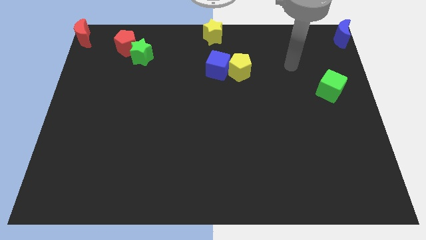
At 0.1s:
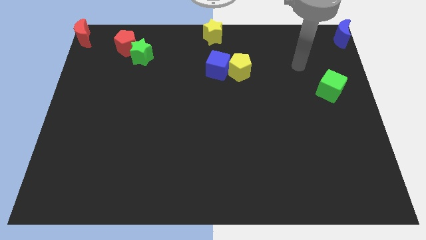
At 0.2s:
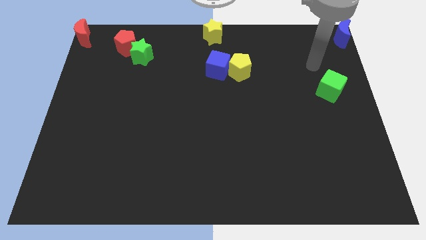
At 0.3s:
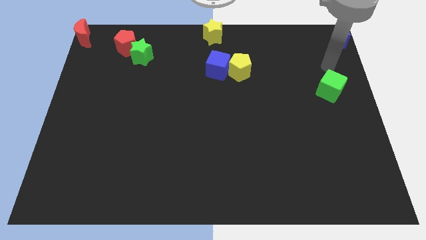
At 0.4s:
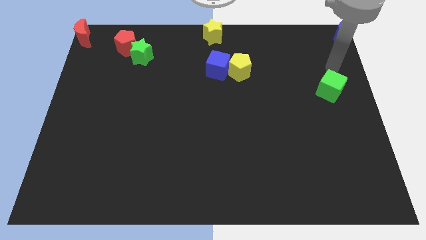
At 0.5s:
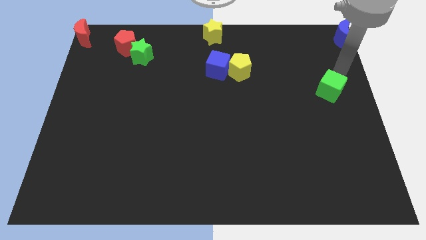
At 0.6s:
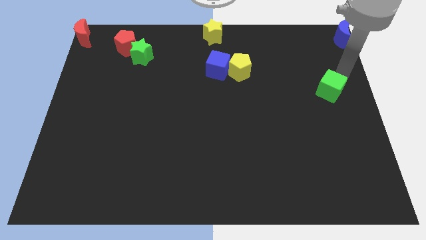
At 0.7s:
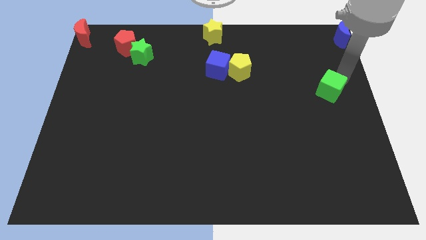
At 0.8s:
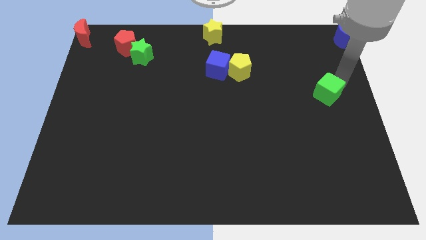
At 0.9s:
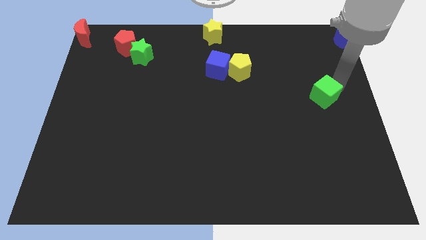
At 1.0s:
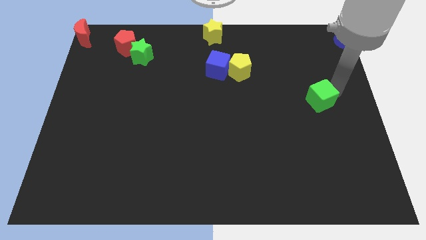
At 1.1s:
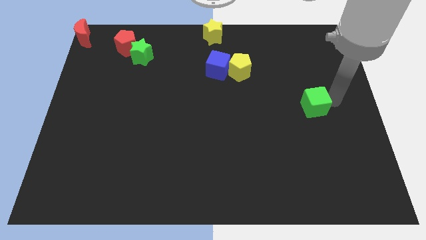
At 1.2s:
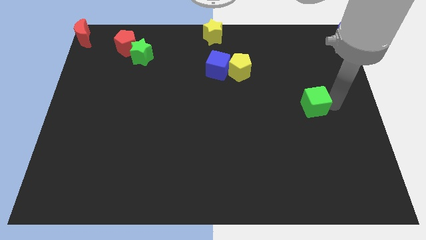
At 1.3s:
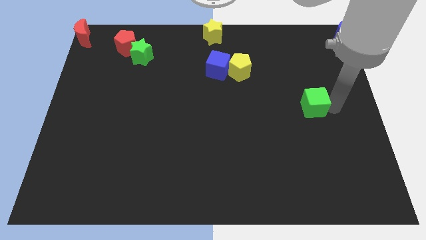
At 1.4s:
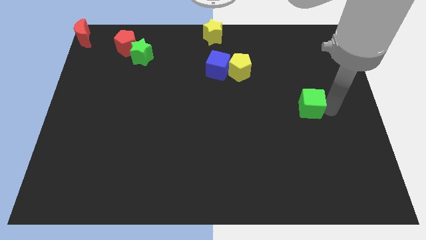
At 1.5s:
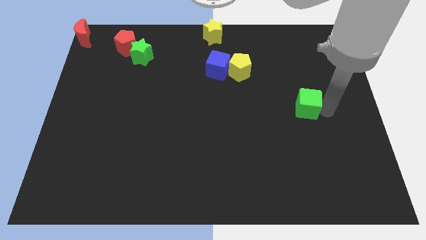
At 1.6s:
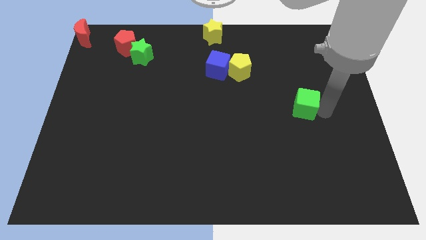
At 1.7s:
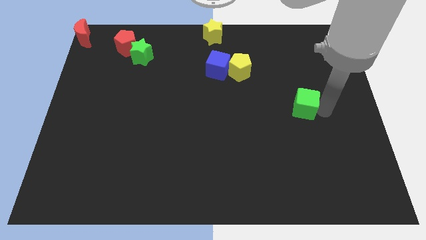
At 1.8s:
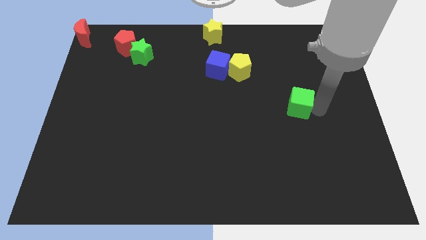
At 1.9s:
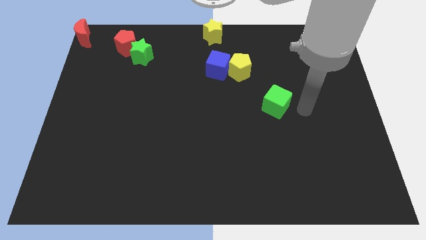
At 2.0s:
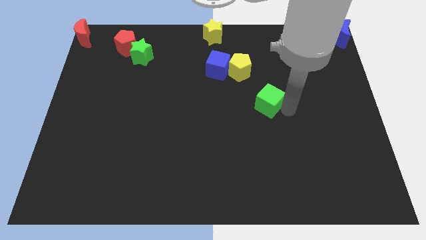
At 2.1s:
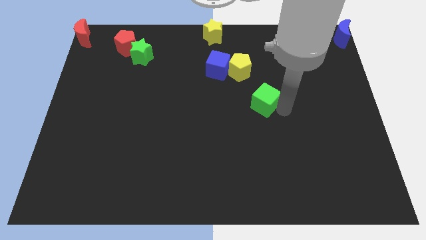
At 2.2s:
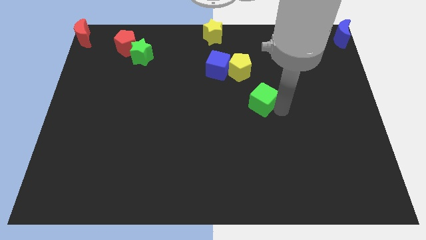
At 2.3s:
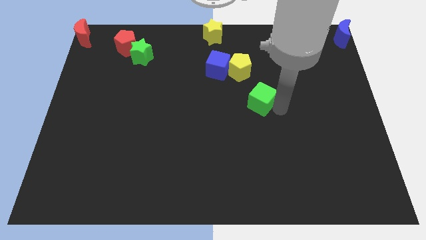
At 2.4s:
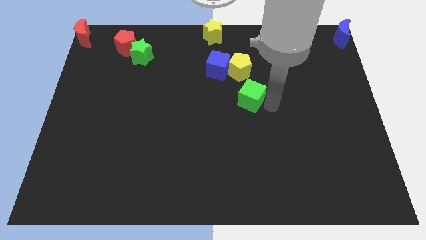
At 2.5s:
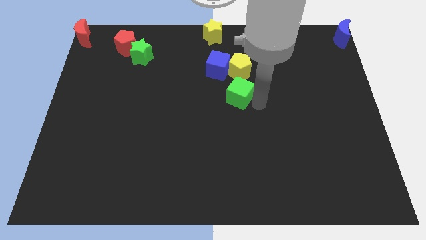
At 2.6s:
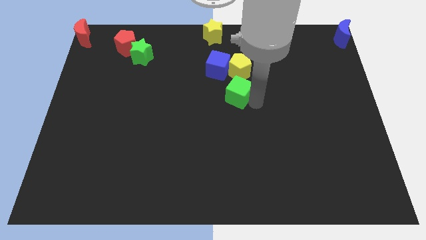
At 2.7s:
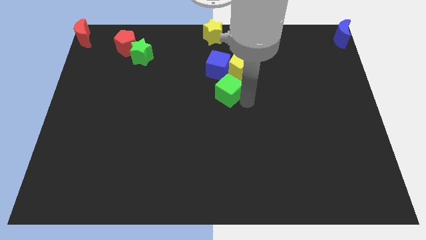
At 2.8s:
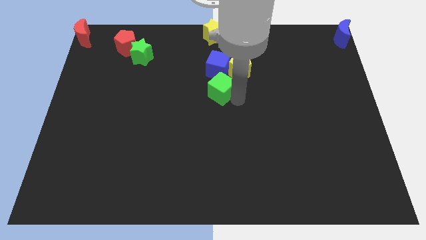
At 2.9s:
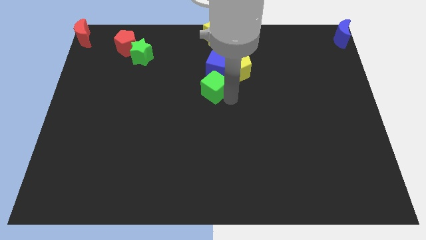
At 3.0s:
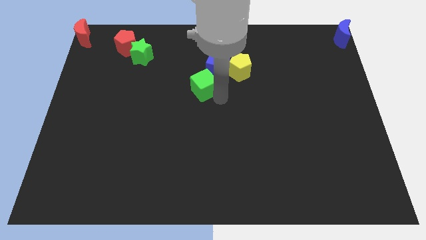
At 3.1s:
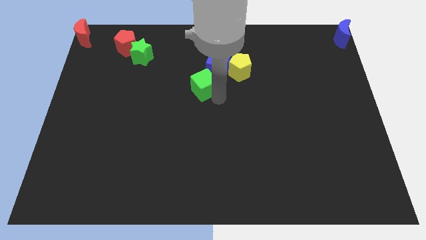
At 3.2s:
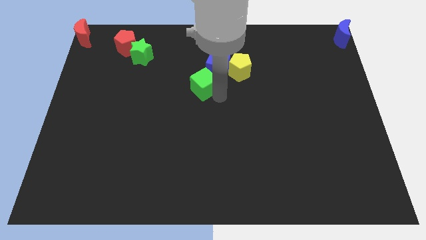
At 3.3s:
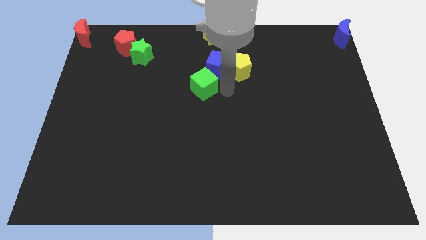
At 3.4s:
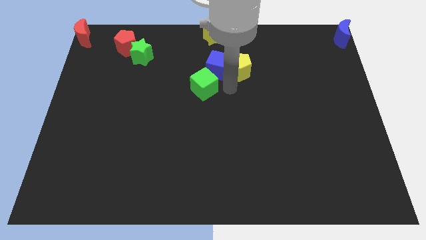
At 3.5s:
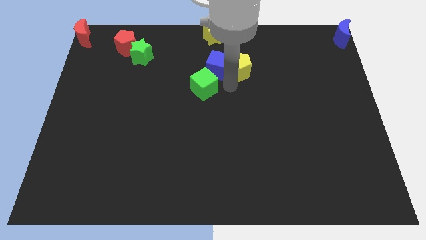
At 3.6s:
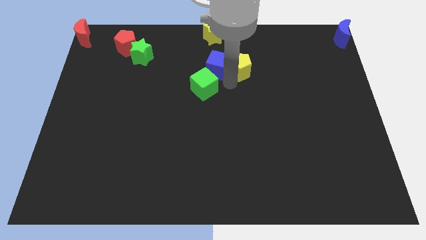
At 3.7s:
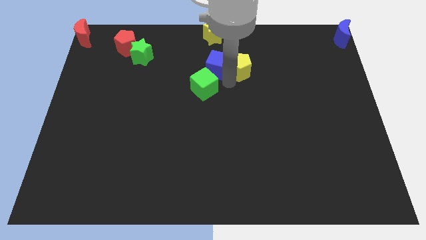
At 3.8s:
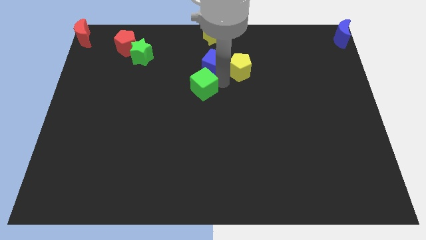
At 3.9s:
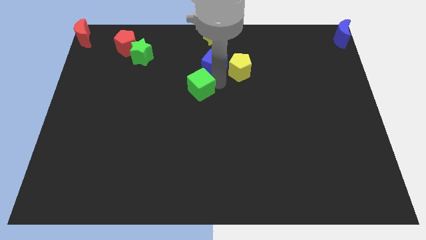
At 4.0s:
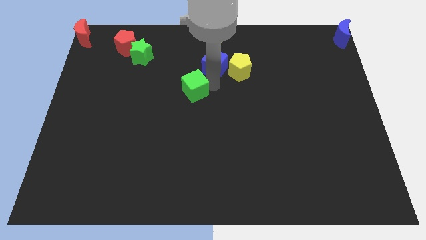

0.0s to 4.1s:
move green cube to the bottom left of blue cube

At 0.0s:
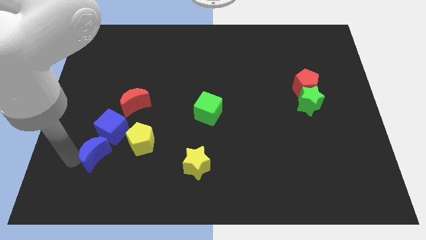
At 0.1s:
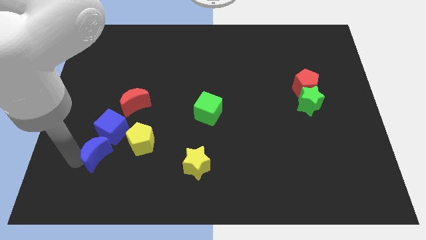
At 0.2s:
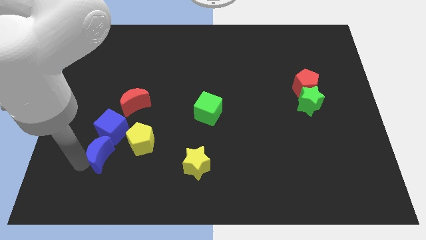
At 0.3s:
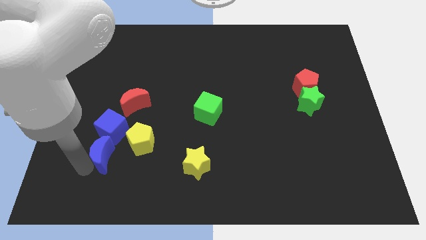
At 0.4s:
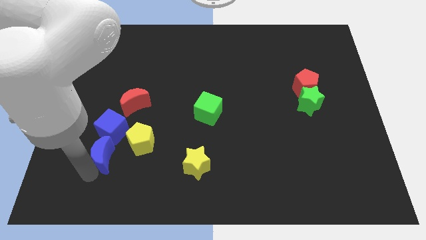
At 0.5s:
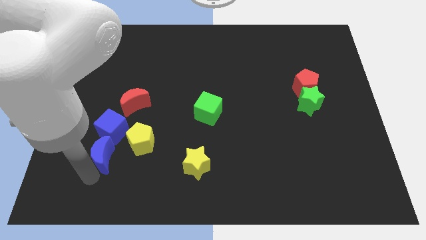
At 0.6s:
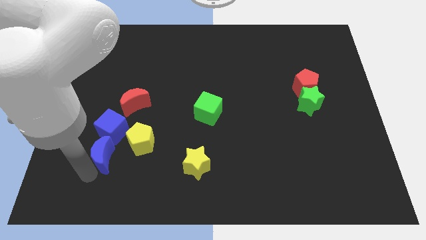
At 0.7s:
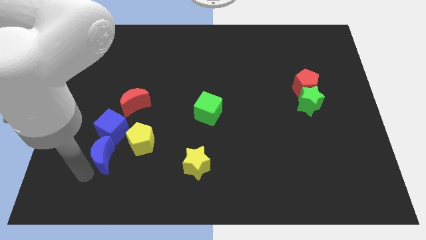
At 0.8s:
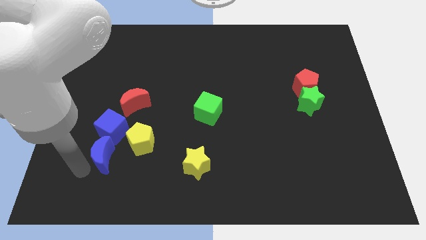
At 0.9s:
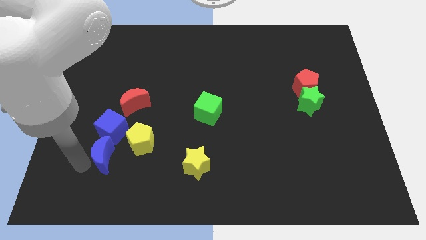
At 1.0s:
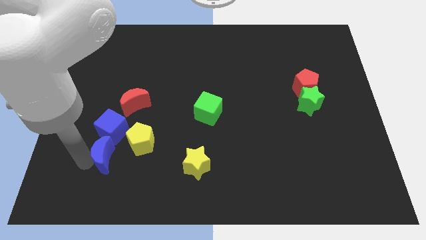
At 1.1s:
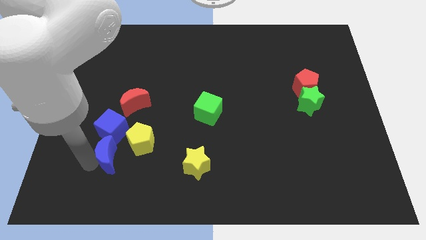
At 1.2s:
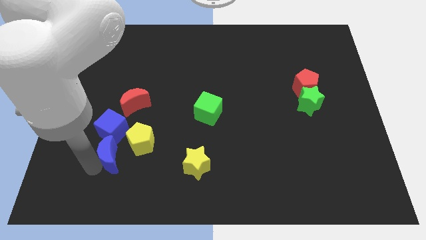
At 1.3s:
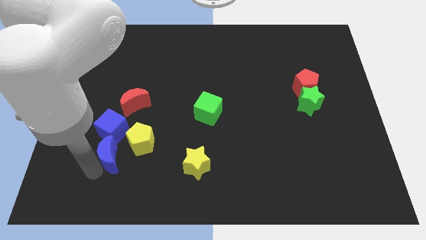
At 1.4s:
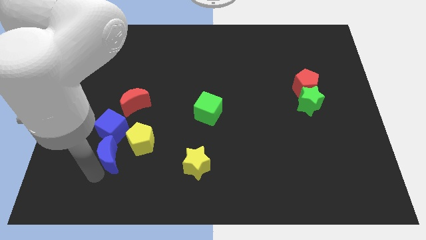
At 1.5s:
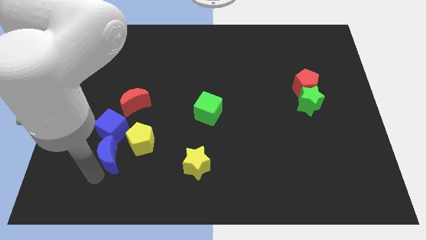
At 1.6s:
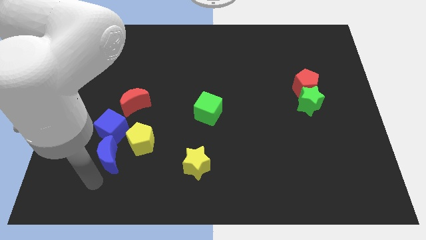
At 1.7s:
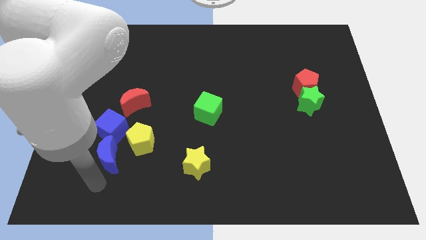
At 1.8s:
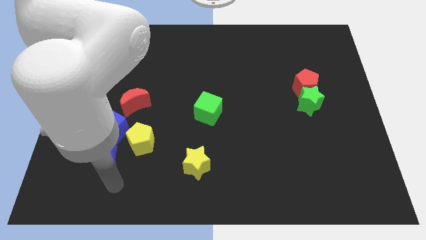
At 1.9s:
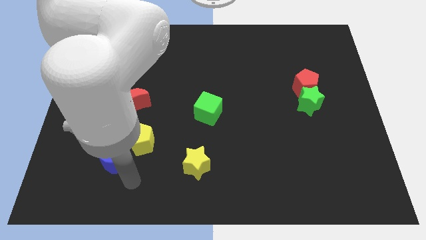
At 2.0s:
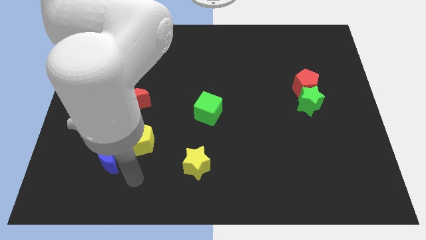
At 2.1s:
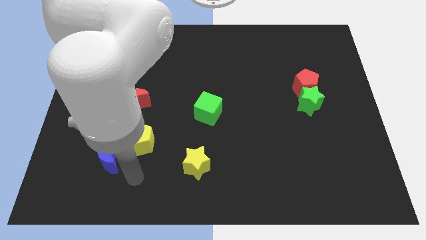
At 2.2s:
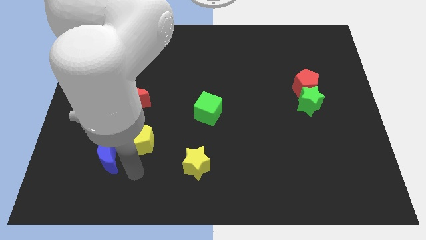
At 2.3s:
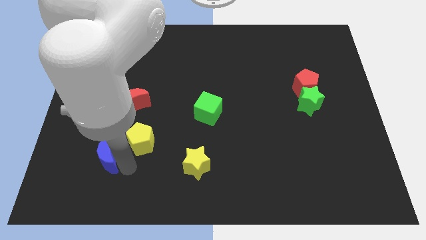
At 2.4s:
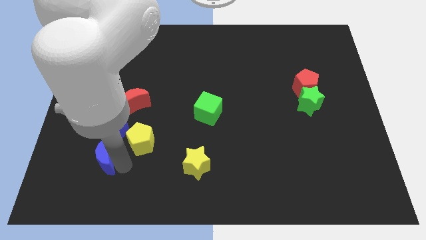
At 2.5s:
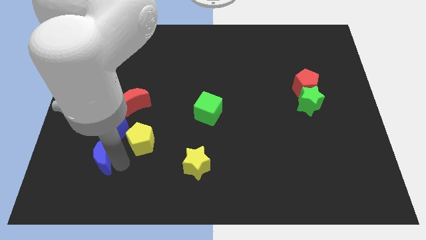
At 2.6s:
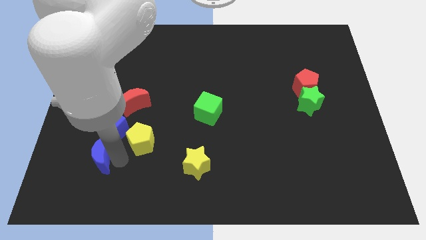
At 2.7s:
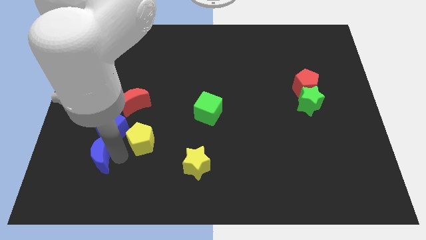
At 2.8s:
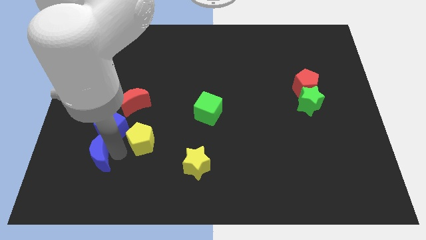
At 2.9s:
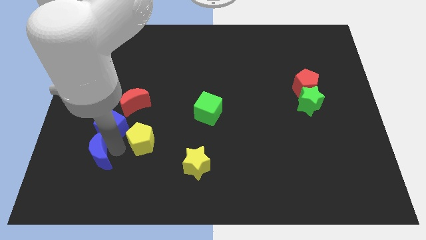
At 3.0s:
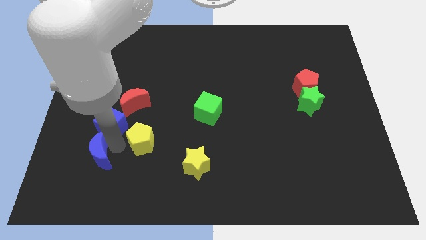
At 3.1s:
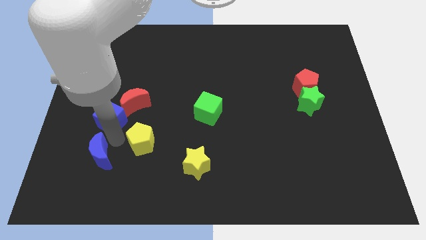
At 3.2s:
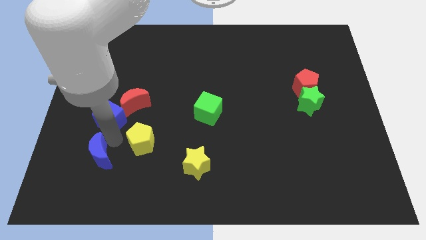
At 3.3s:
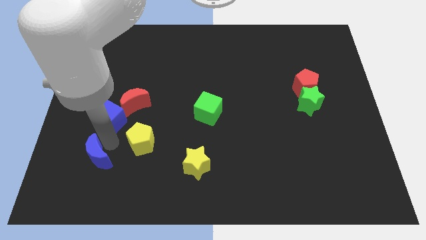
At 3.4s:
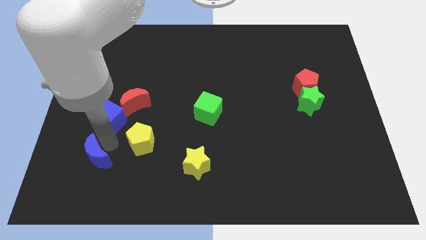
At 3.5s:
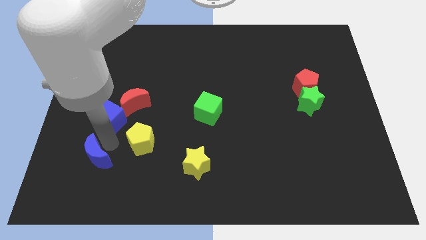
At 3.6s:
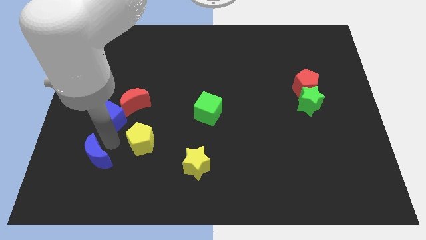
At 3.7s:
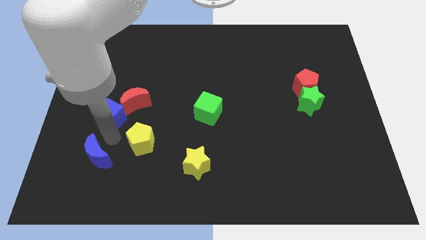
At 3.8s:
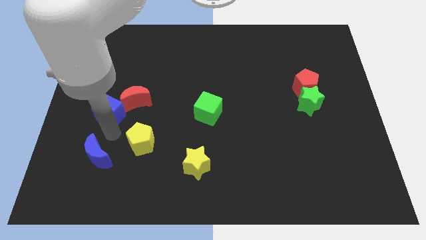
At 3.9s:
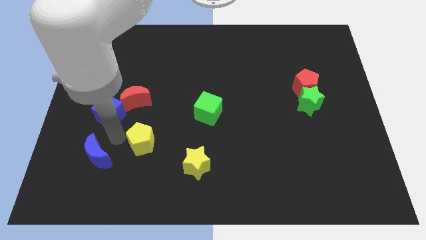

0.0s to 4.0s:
separate the blue cube and blue crescent

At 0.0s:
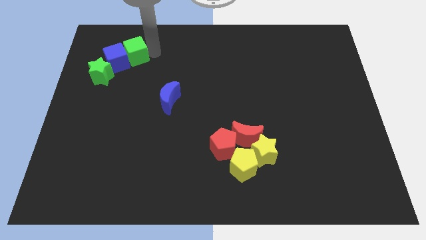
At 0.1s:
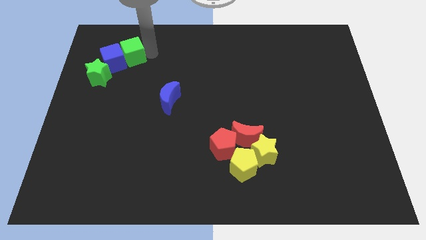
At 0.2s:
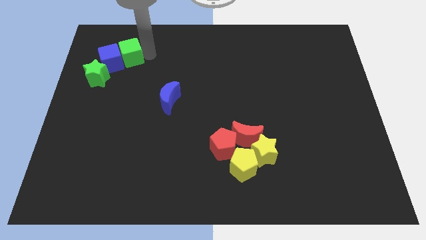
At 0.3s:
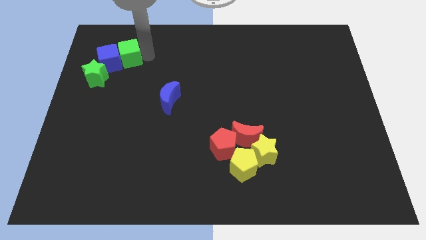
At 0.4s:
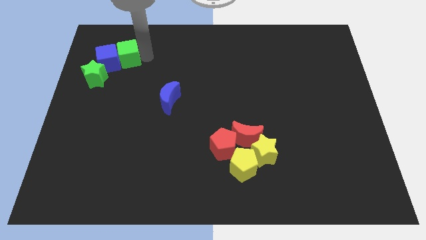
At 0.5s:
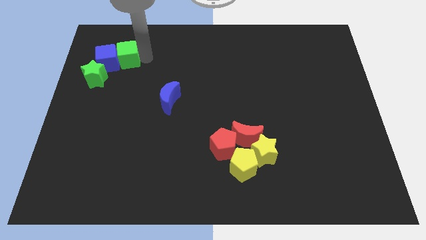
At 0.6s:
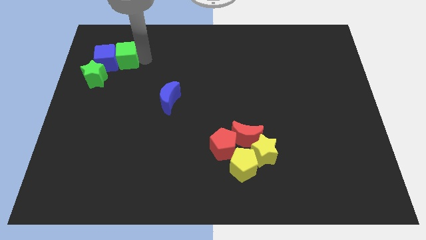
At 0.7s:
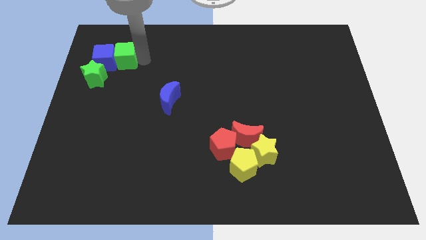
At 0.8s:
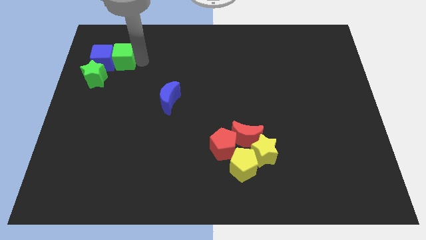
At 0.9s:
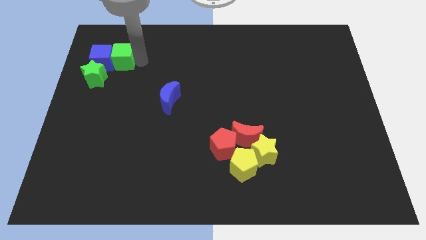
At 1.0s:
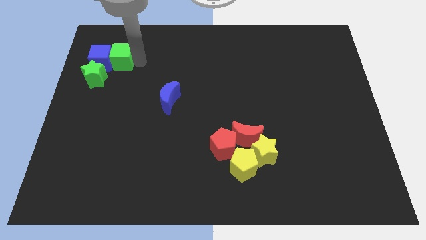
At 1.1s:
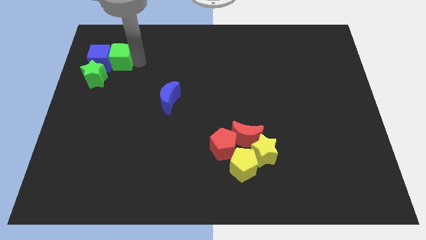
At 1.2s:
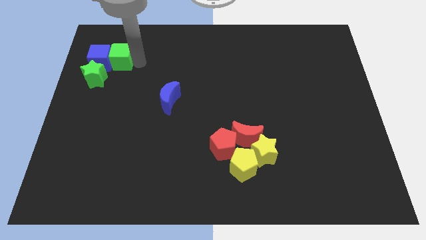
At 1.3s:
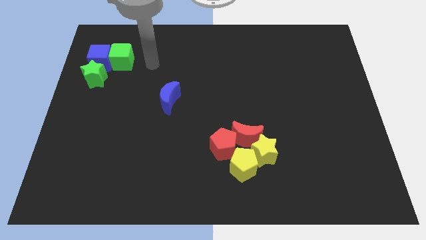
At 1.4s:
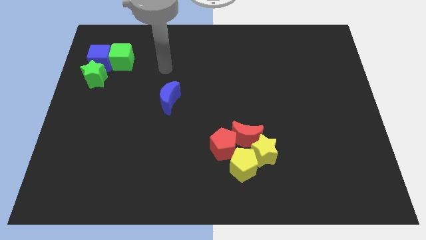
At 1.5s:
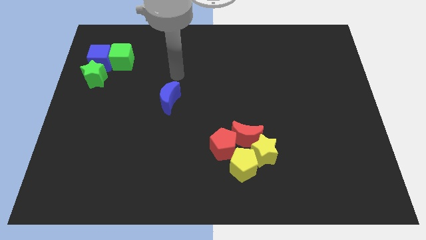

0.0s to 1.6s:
push the green cube along with the blue cube to the top left of the board
